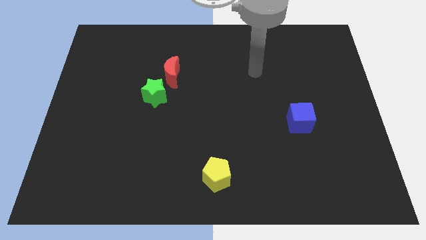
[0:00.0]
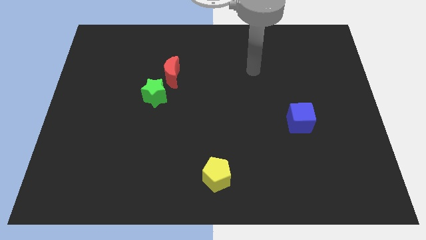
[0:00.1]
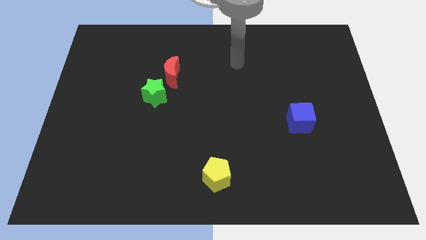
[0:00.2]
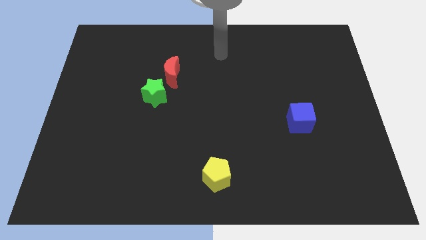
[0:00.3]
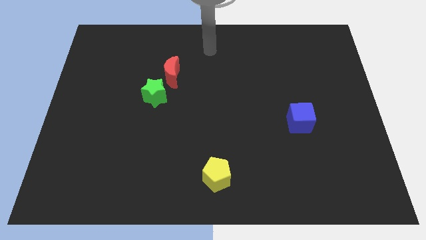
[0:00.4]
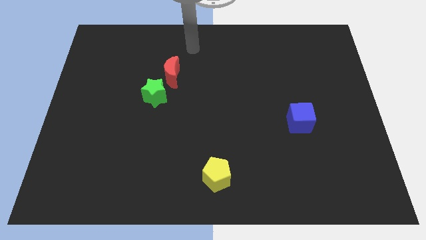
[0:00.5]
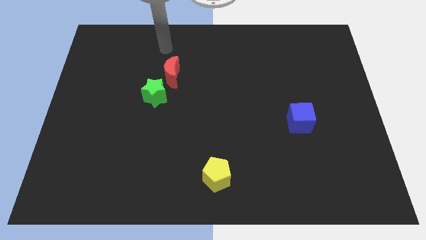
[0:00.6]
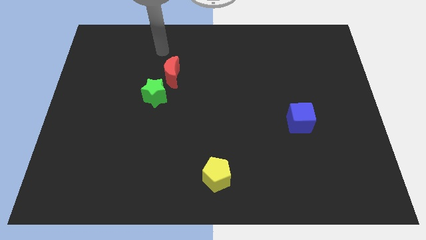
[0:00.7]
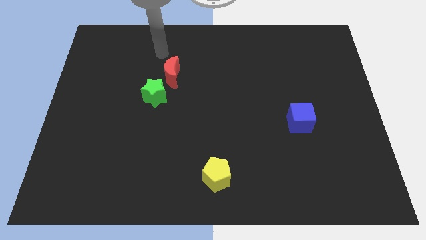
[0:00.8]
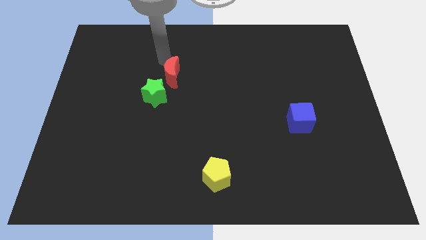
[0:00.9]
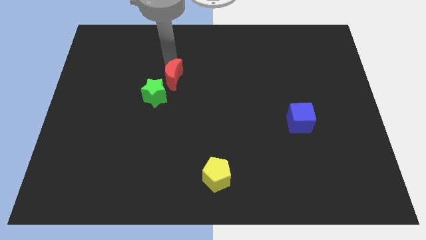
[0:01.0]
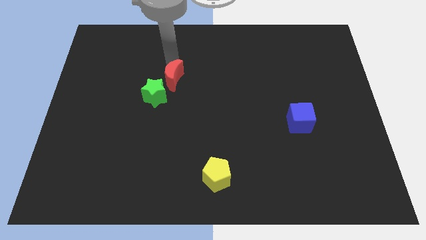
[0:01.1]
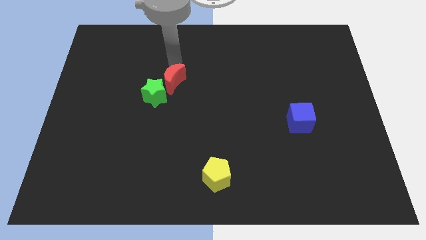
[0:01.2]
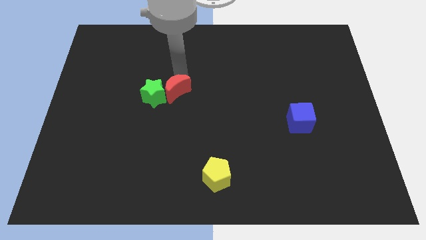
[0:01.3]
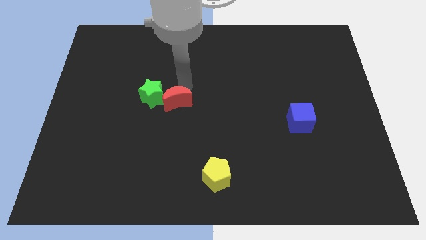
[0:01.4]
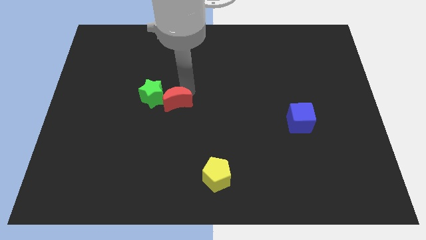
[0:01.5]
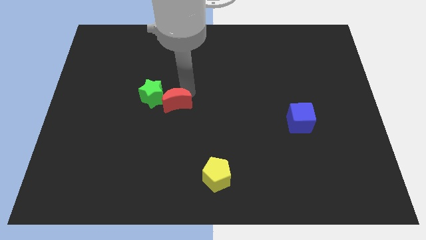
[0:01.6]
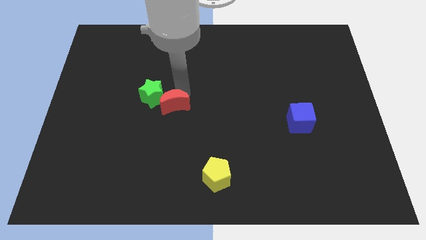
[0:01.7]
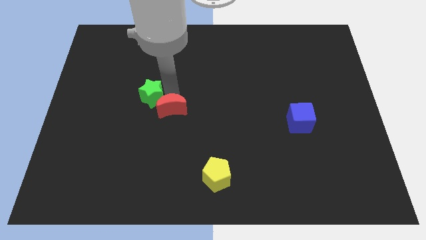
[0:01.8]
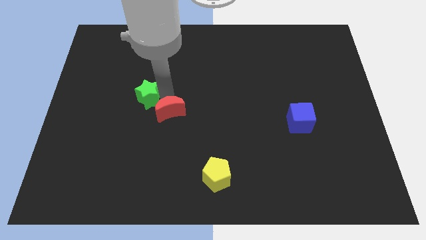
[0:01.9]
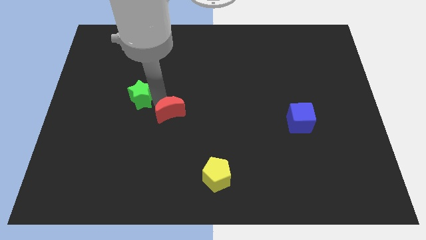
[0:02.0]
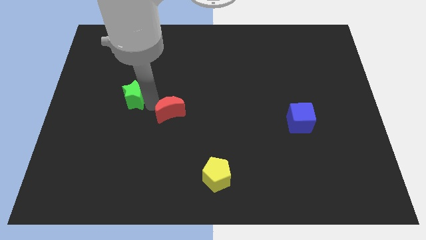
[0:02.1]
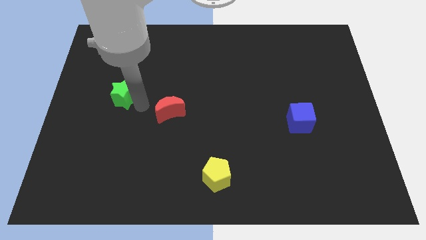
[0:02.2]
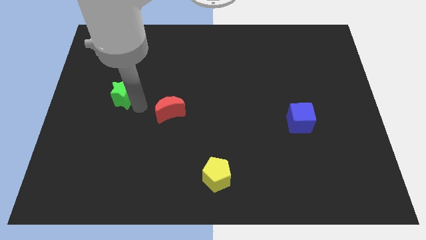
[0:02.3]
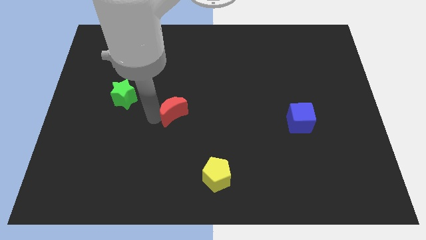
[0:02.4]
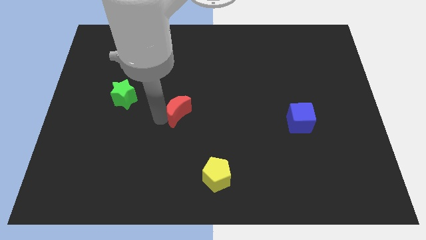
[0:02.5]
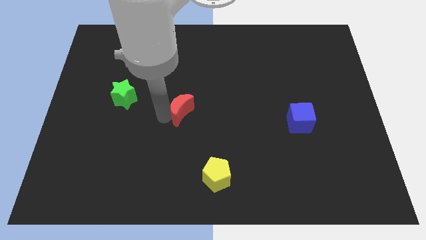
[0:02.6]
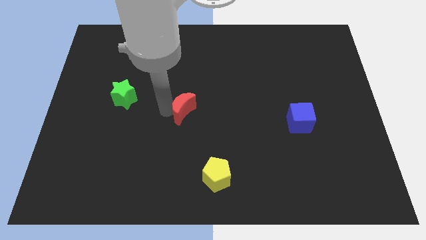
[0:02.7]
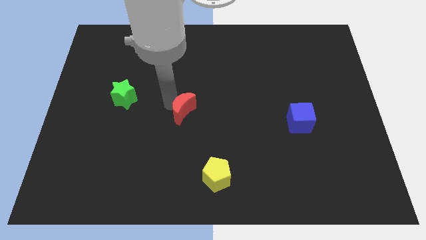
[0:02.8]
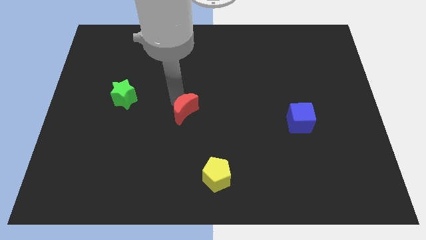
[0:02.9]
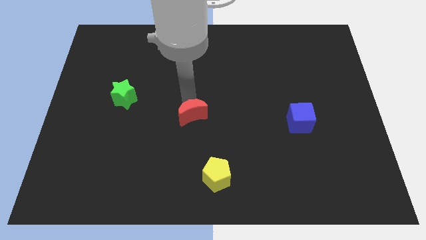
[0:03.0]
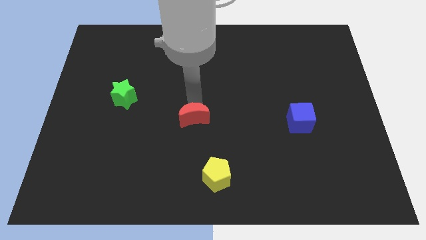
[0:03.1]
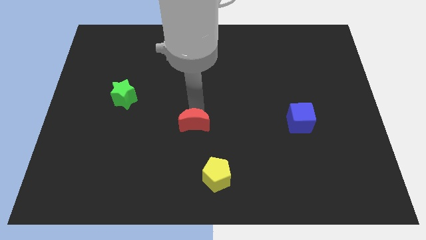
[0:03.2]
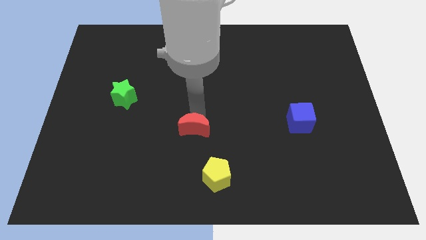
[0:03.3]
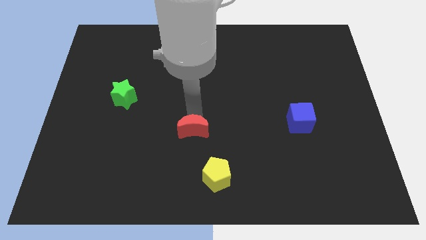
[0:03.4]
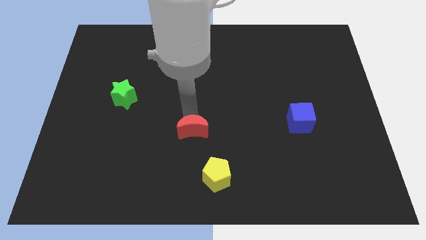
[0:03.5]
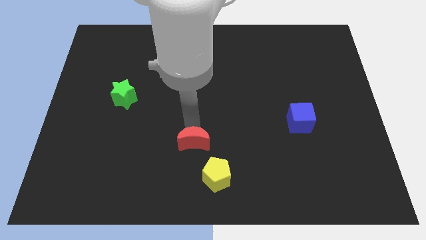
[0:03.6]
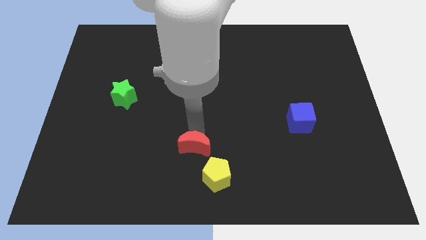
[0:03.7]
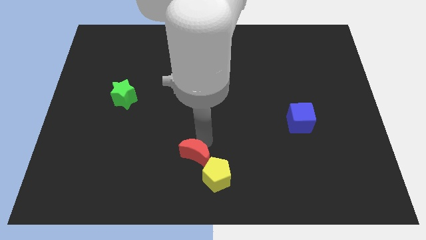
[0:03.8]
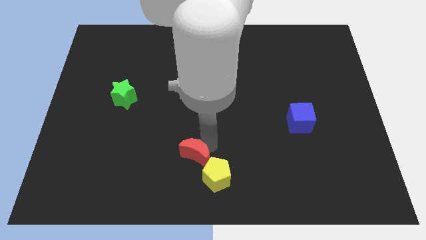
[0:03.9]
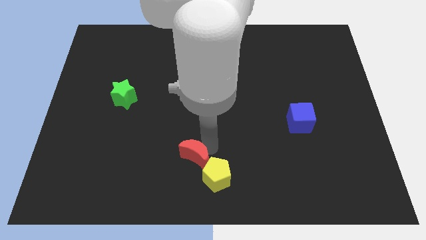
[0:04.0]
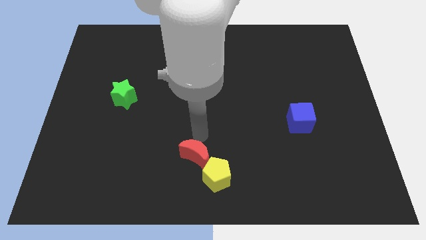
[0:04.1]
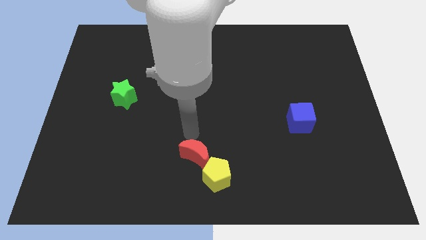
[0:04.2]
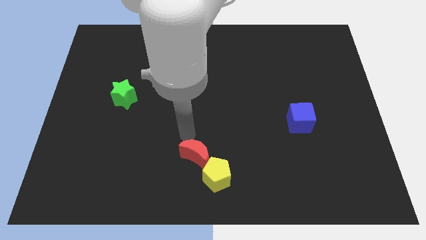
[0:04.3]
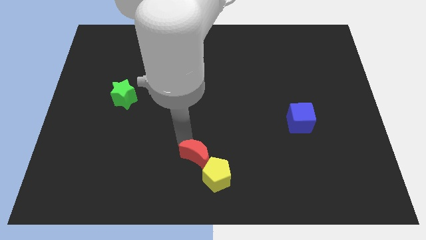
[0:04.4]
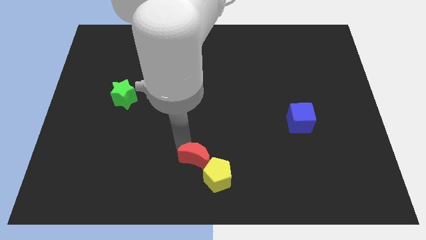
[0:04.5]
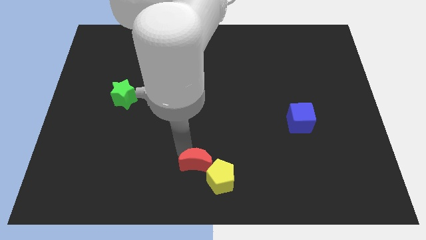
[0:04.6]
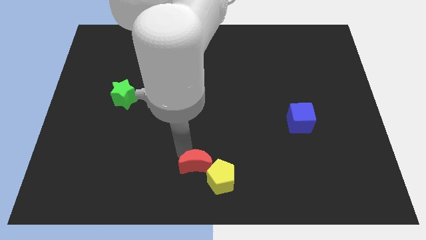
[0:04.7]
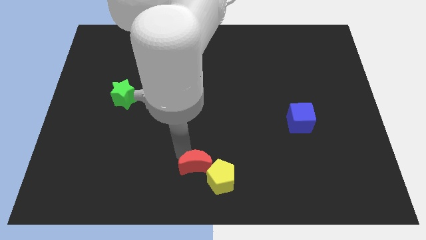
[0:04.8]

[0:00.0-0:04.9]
move the red block close to the pentagon

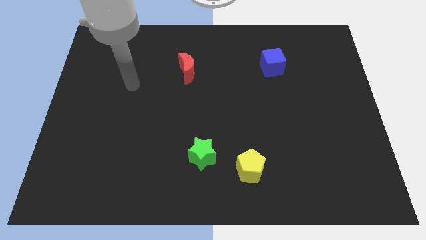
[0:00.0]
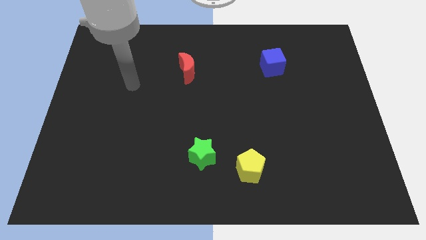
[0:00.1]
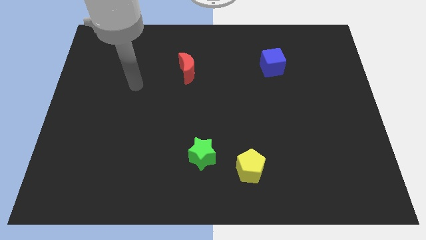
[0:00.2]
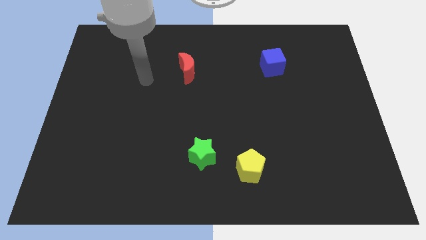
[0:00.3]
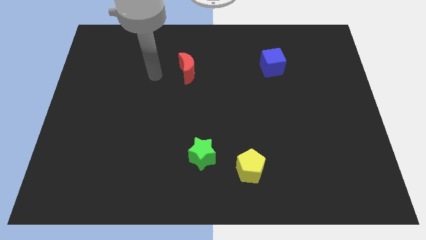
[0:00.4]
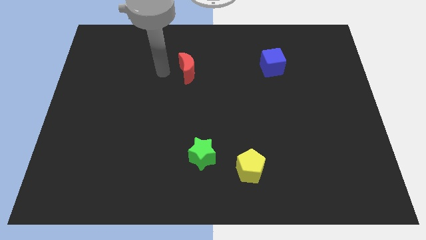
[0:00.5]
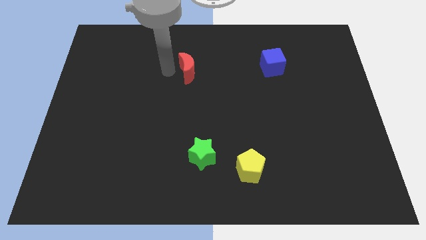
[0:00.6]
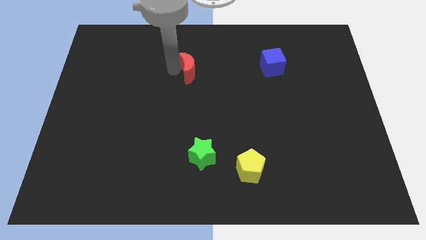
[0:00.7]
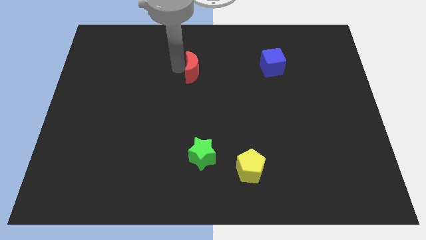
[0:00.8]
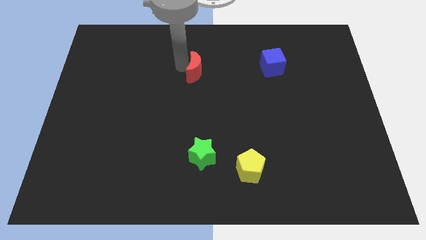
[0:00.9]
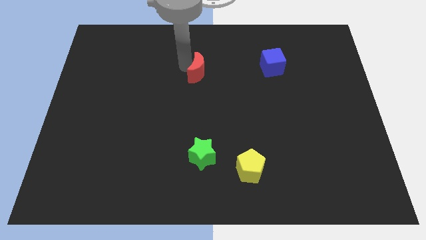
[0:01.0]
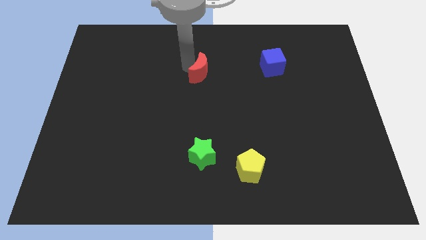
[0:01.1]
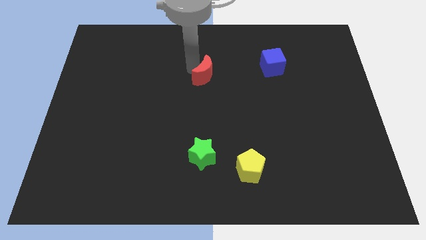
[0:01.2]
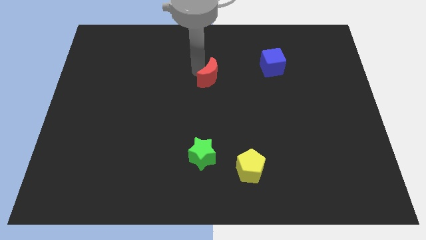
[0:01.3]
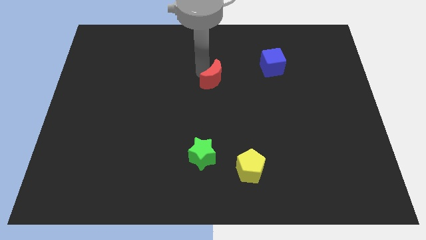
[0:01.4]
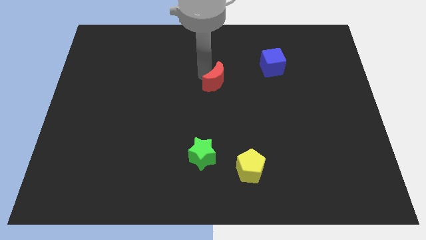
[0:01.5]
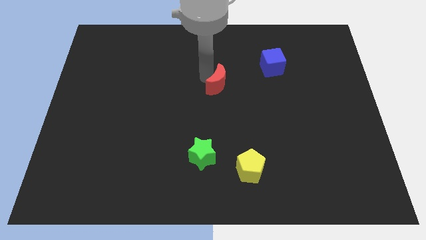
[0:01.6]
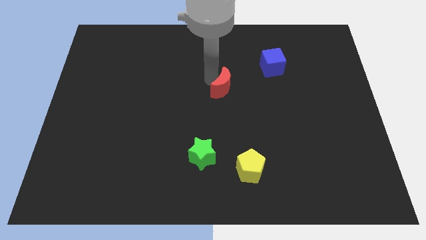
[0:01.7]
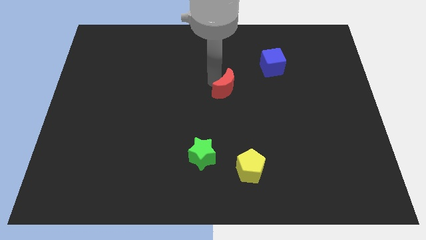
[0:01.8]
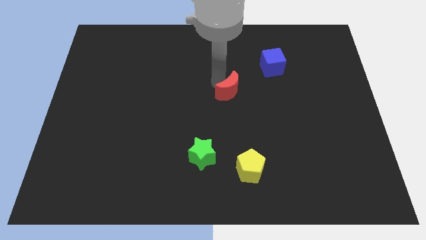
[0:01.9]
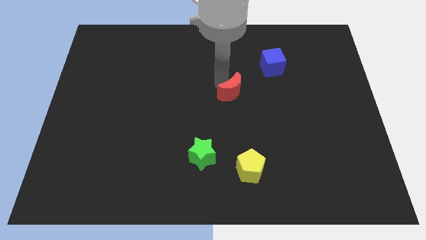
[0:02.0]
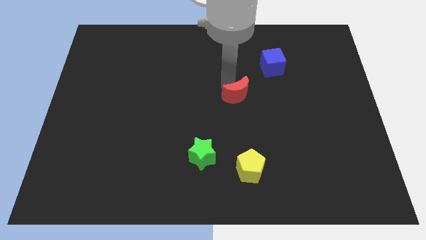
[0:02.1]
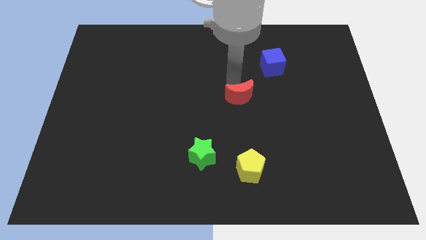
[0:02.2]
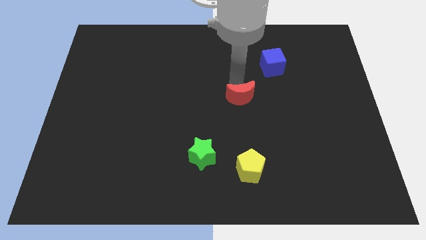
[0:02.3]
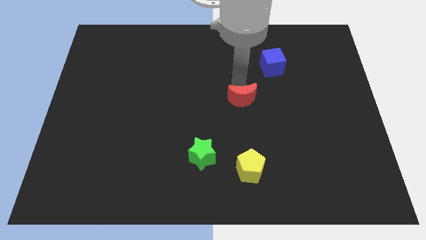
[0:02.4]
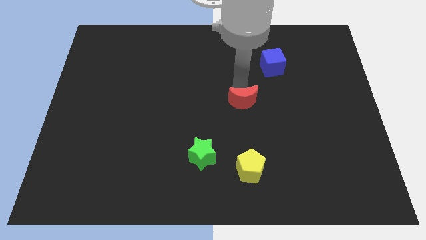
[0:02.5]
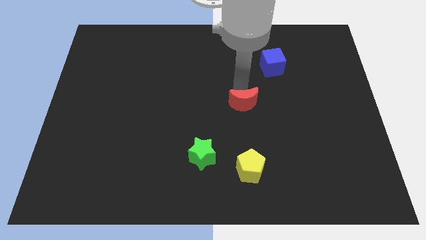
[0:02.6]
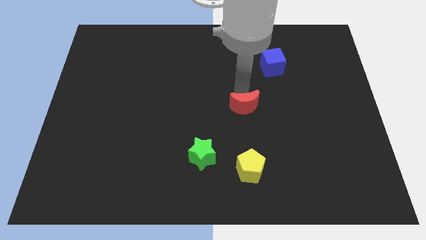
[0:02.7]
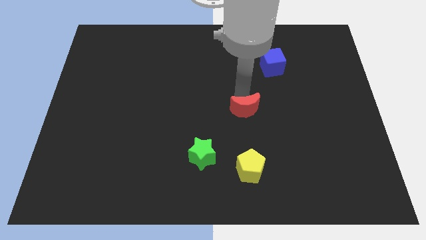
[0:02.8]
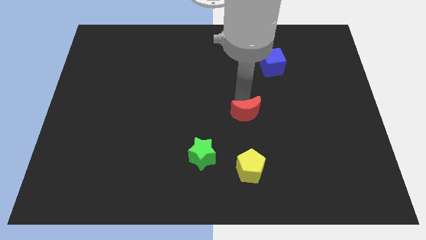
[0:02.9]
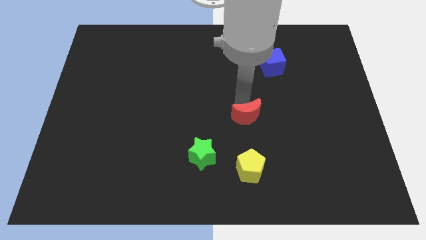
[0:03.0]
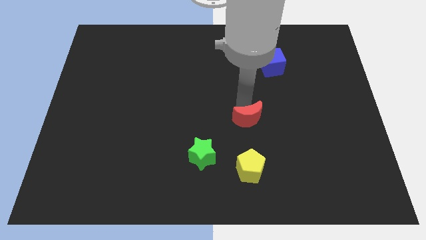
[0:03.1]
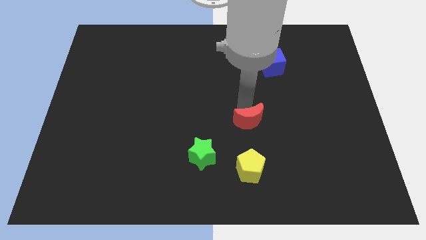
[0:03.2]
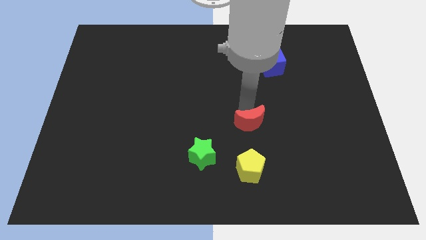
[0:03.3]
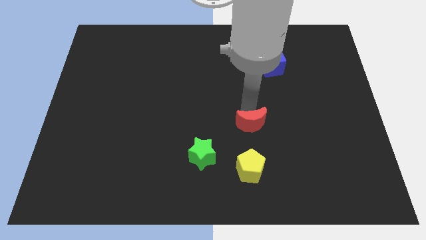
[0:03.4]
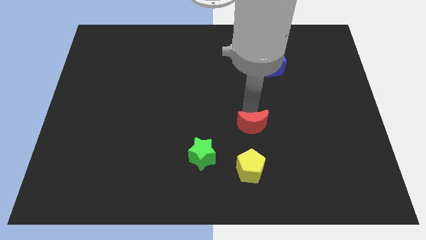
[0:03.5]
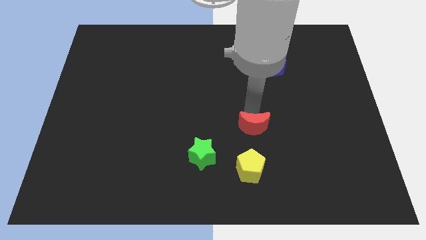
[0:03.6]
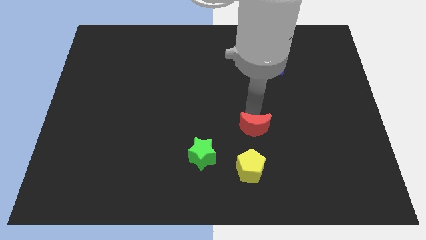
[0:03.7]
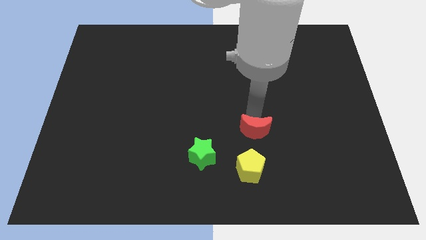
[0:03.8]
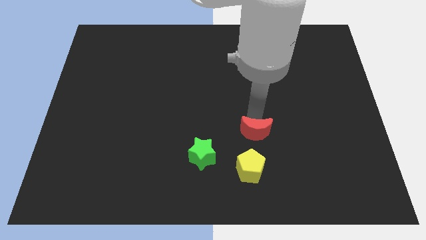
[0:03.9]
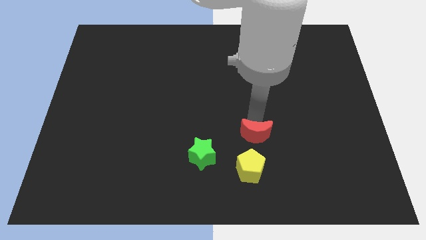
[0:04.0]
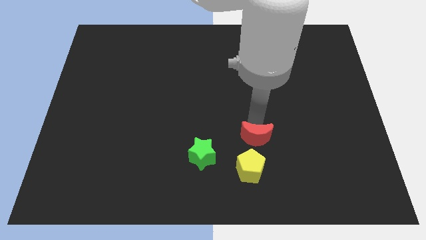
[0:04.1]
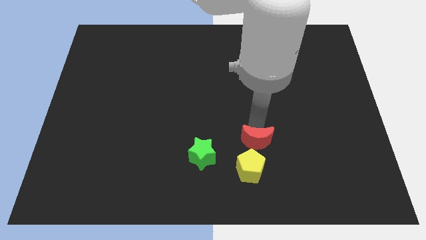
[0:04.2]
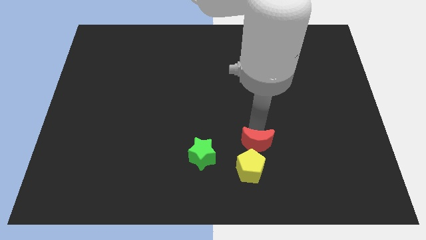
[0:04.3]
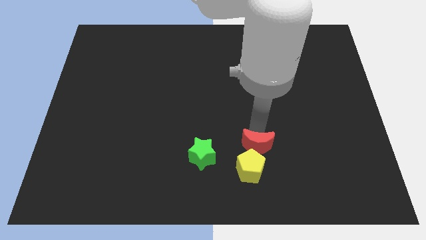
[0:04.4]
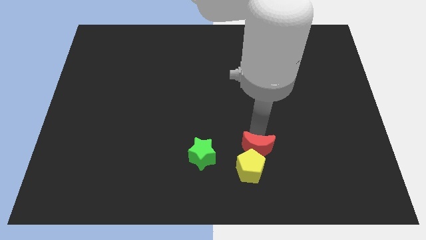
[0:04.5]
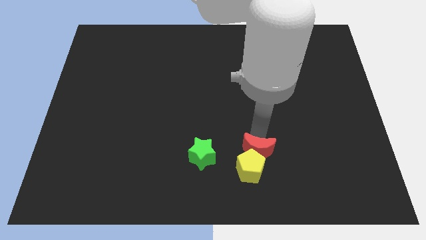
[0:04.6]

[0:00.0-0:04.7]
push the red moon next to the yellow pentagon
